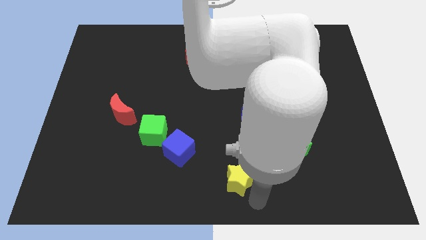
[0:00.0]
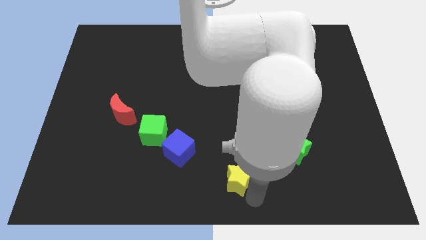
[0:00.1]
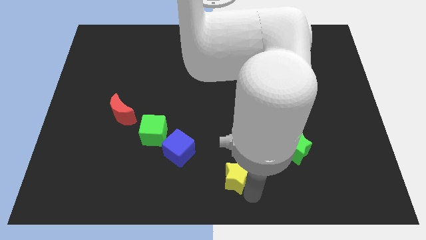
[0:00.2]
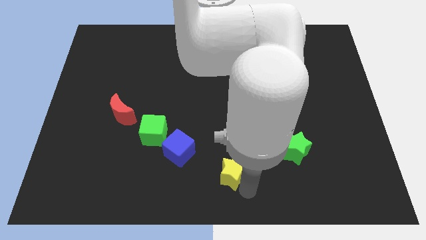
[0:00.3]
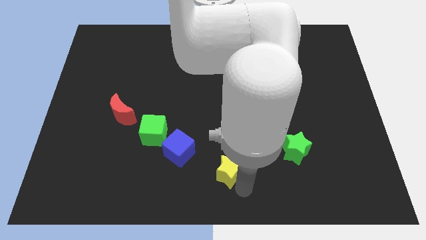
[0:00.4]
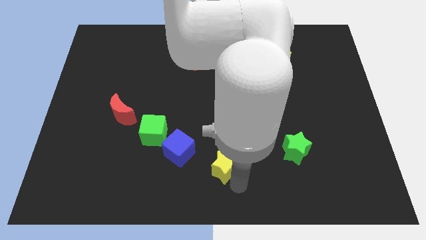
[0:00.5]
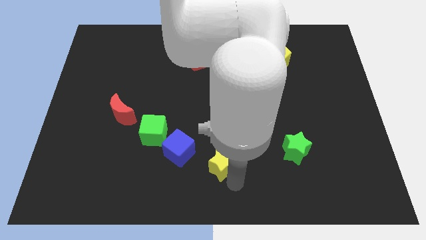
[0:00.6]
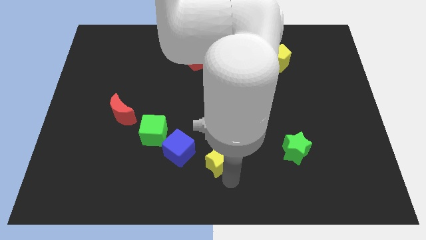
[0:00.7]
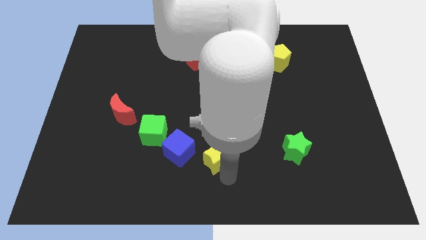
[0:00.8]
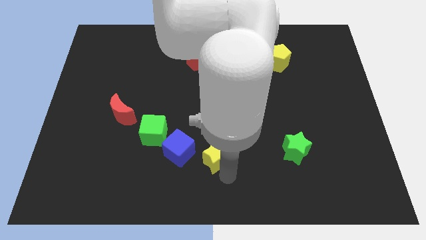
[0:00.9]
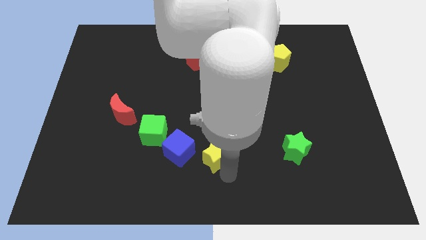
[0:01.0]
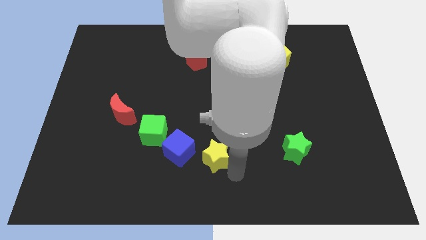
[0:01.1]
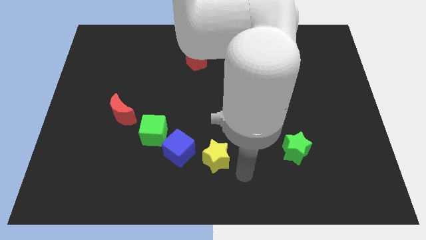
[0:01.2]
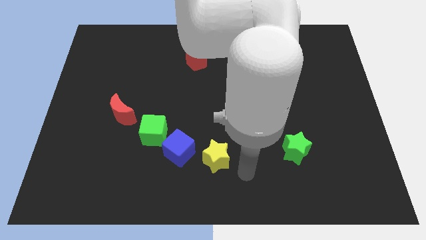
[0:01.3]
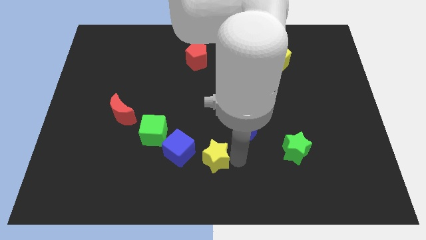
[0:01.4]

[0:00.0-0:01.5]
push the yellow star towards the blue cube

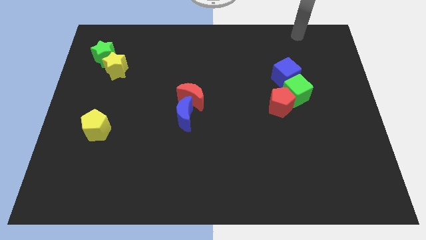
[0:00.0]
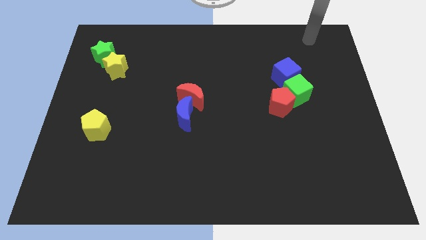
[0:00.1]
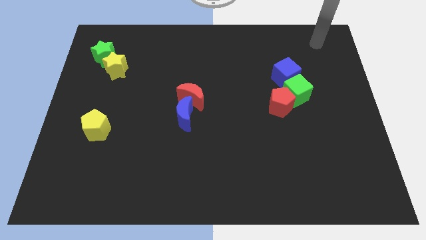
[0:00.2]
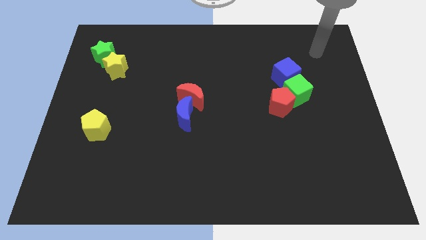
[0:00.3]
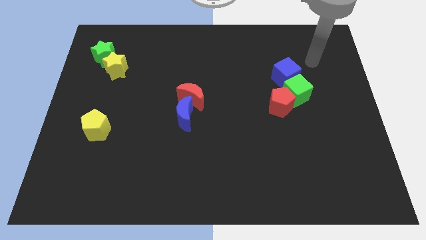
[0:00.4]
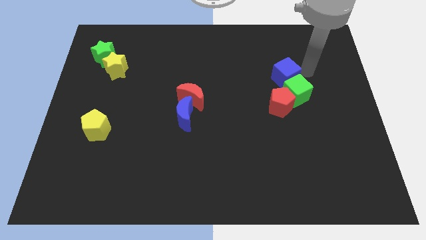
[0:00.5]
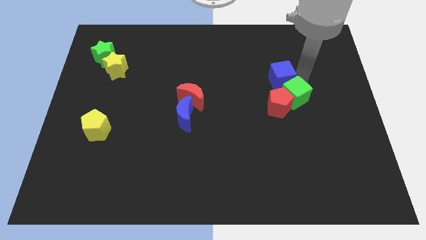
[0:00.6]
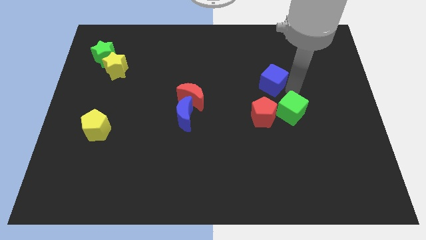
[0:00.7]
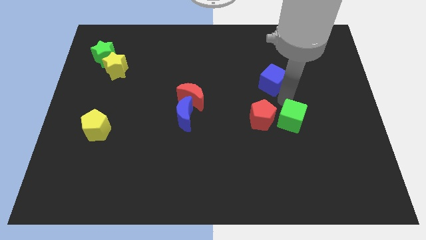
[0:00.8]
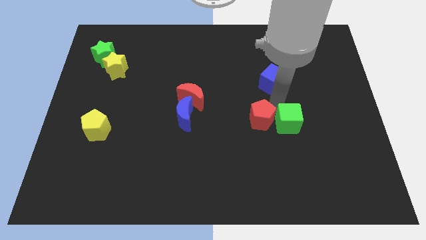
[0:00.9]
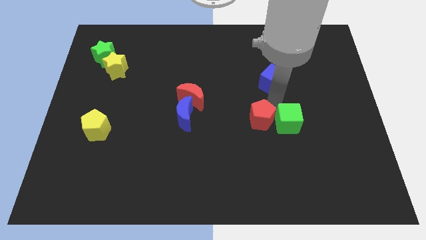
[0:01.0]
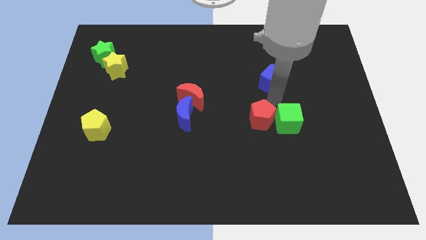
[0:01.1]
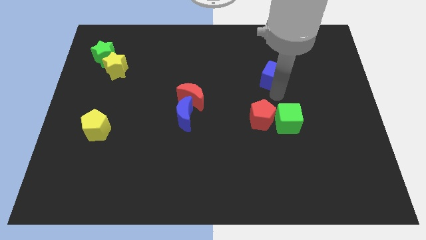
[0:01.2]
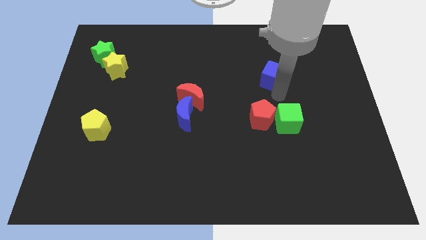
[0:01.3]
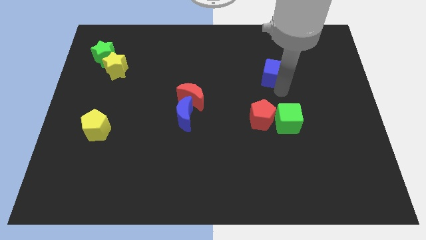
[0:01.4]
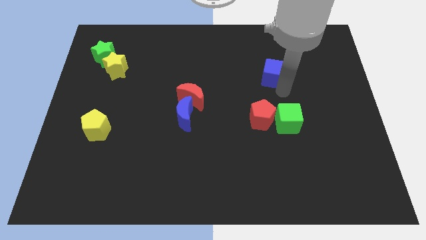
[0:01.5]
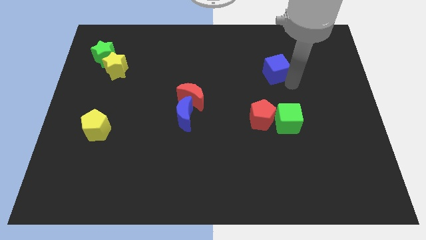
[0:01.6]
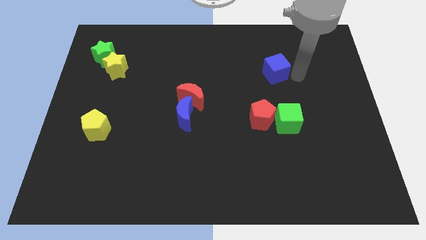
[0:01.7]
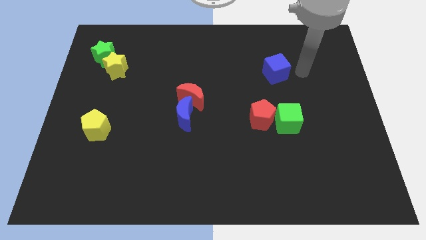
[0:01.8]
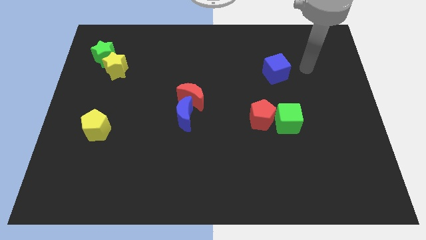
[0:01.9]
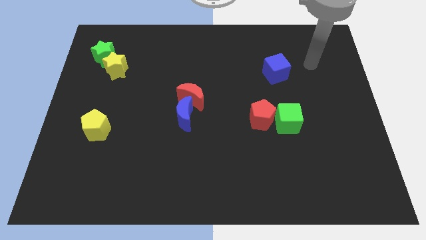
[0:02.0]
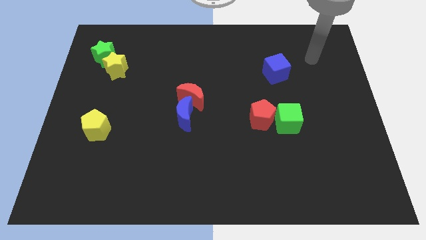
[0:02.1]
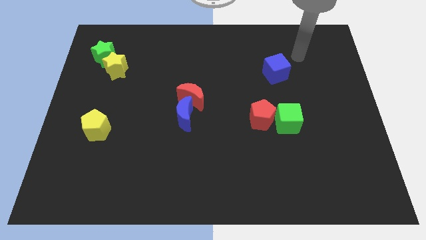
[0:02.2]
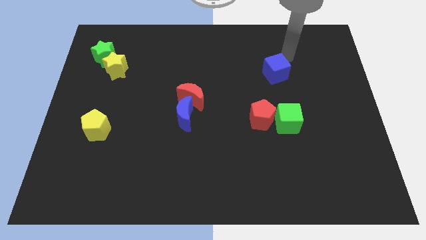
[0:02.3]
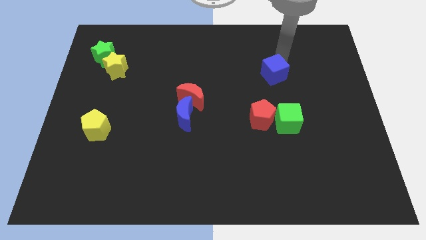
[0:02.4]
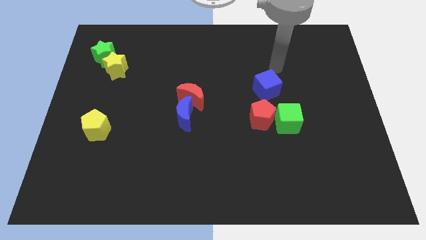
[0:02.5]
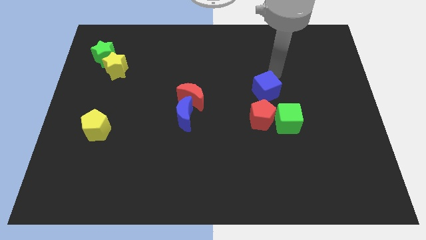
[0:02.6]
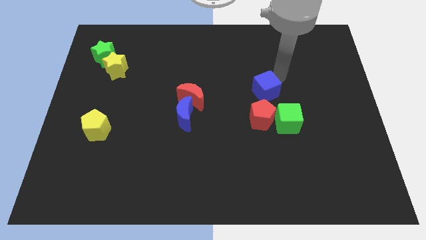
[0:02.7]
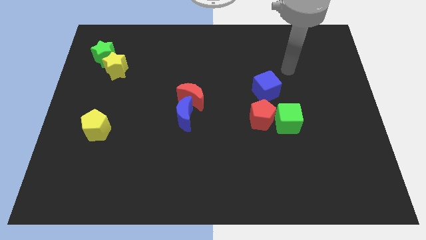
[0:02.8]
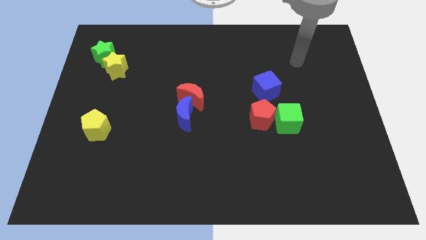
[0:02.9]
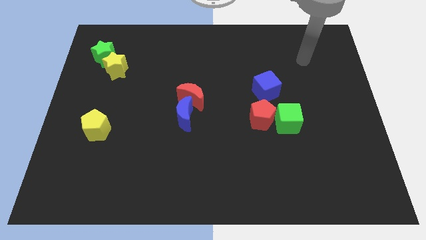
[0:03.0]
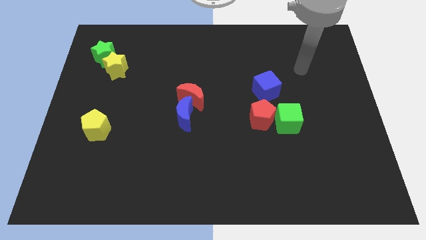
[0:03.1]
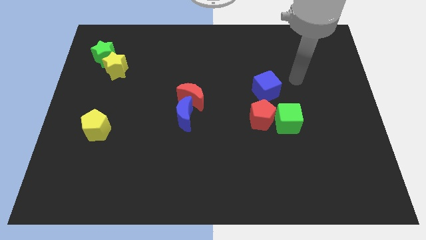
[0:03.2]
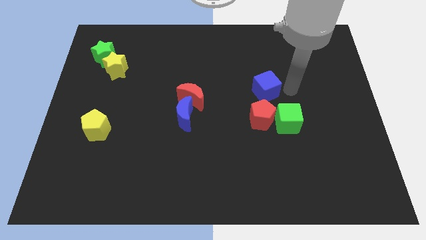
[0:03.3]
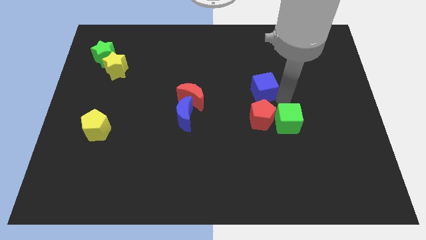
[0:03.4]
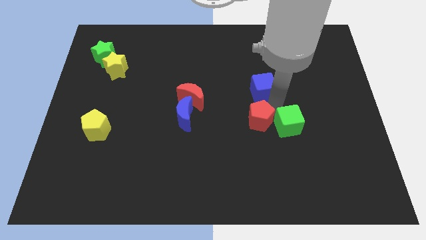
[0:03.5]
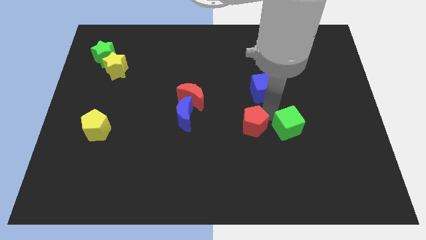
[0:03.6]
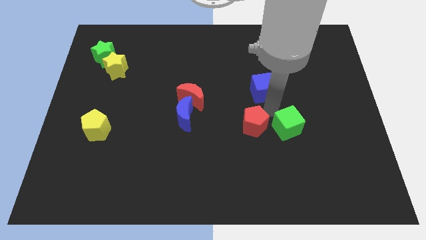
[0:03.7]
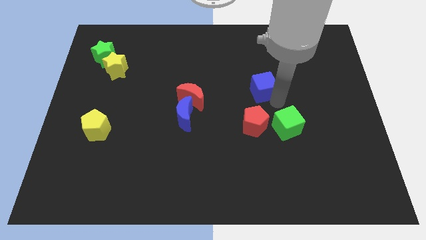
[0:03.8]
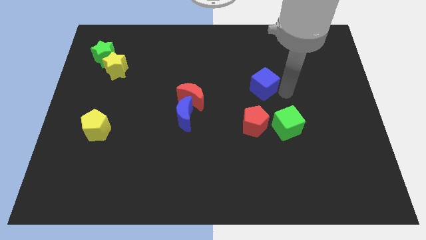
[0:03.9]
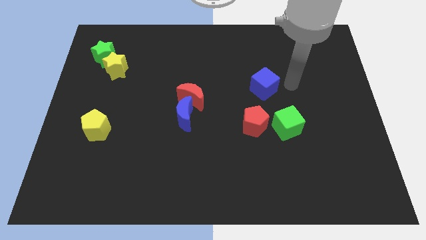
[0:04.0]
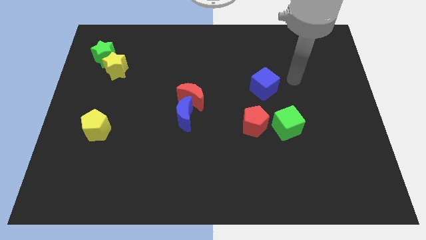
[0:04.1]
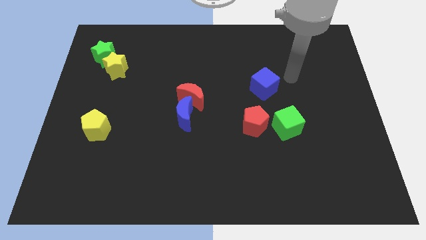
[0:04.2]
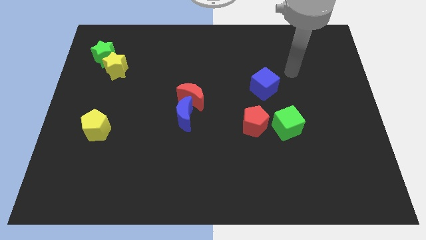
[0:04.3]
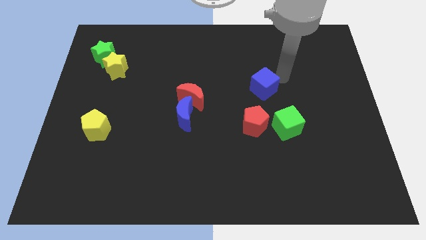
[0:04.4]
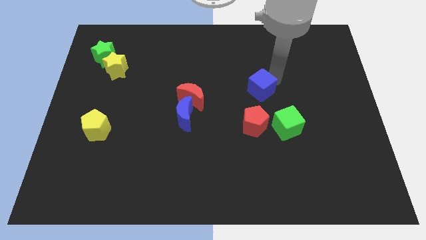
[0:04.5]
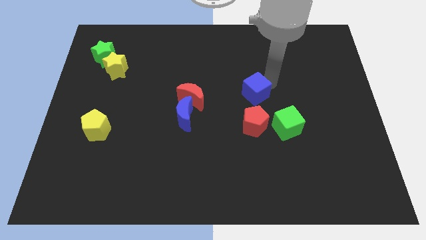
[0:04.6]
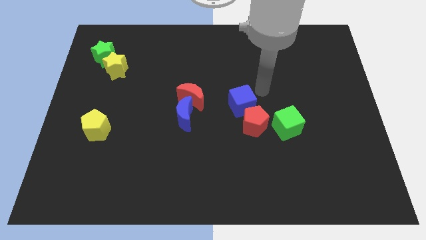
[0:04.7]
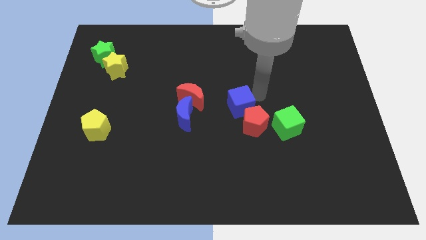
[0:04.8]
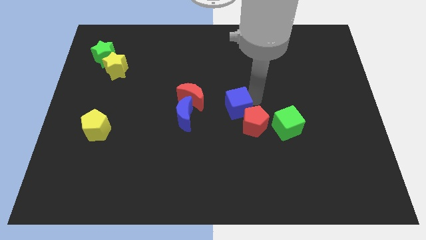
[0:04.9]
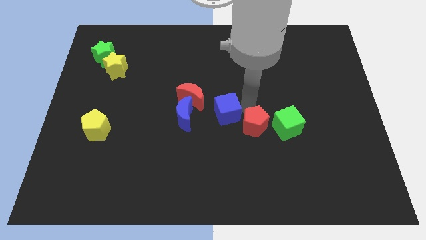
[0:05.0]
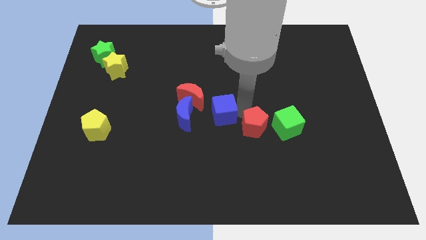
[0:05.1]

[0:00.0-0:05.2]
place the blue cube to the left of the red pentagon

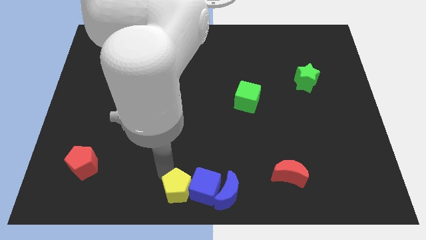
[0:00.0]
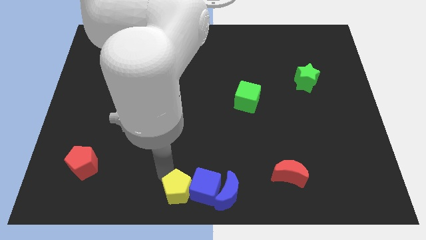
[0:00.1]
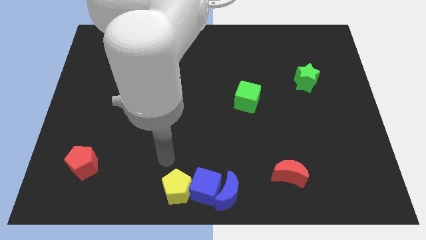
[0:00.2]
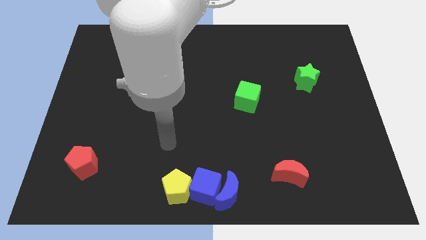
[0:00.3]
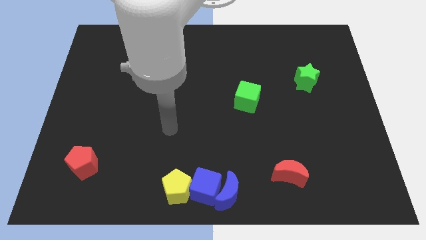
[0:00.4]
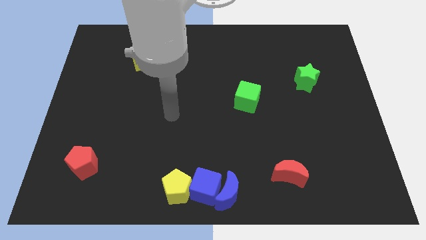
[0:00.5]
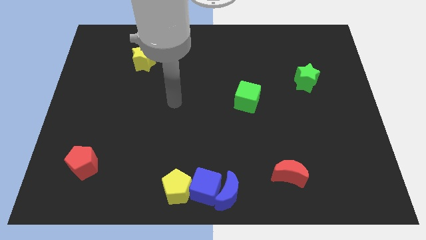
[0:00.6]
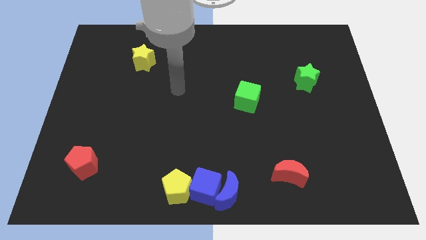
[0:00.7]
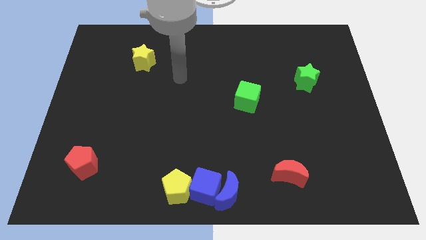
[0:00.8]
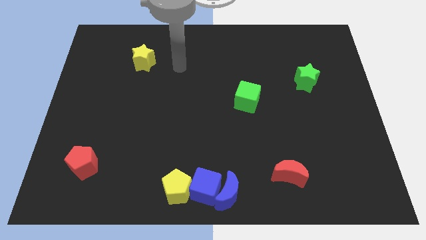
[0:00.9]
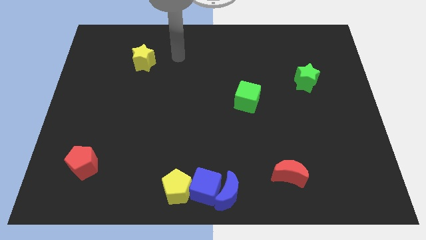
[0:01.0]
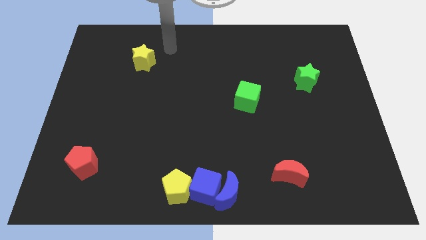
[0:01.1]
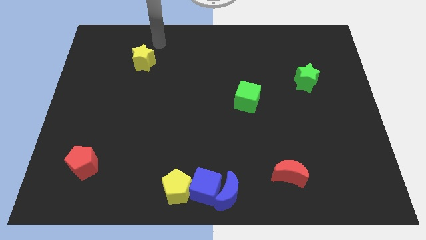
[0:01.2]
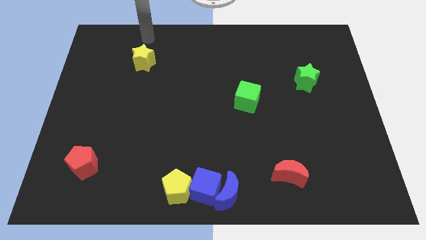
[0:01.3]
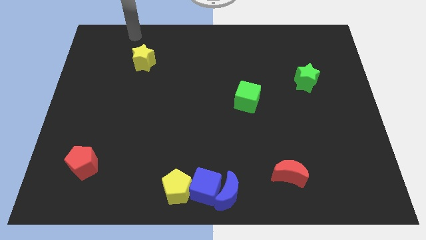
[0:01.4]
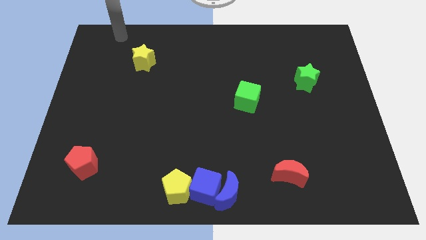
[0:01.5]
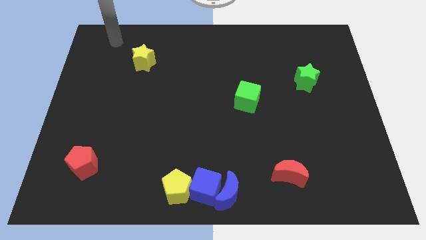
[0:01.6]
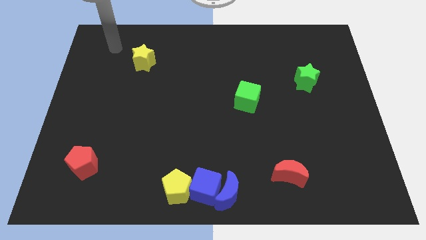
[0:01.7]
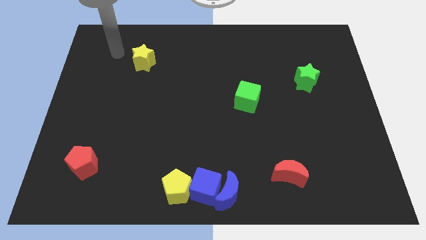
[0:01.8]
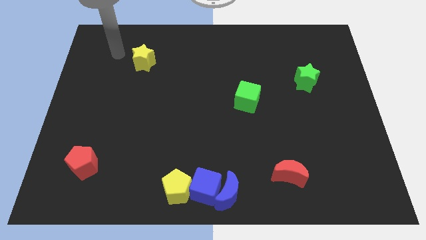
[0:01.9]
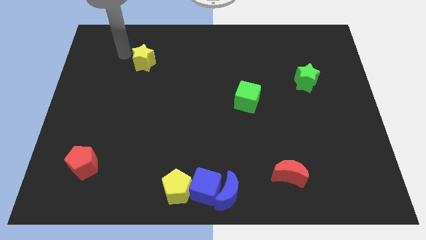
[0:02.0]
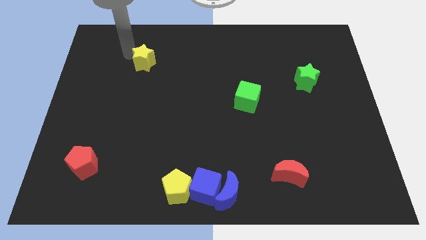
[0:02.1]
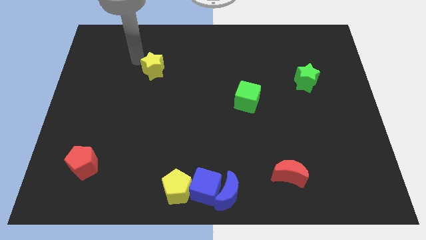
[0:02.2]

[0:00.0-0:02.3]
place the arm diagonally to the yellow star
